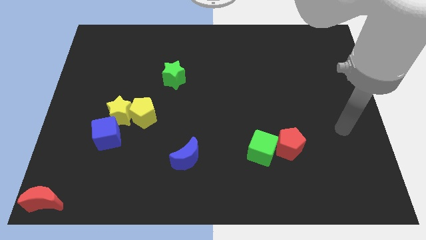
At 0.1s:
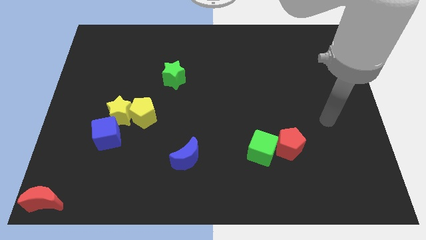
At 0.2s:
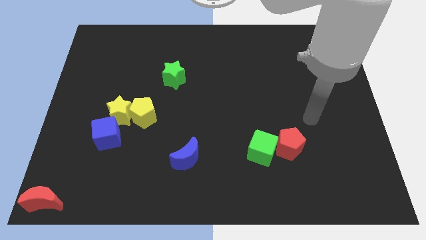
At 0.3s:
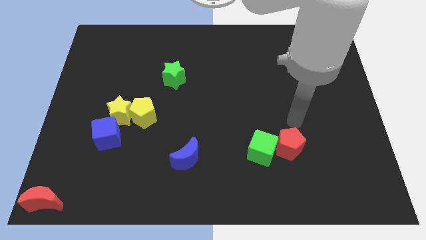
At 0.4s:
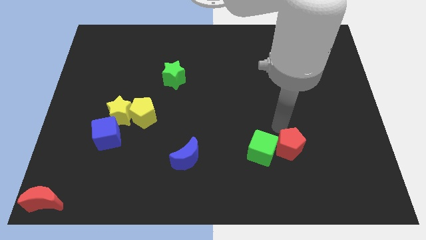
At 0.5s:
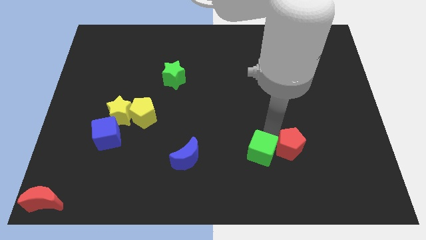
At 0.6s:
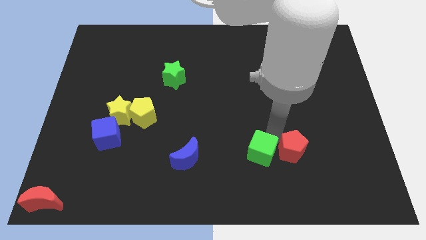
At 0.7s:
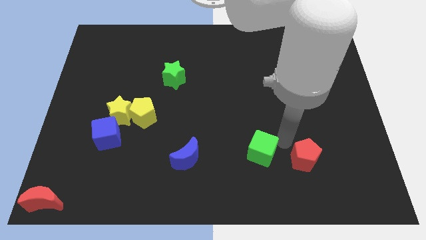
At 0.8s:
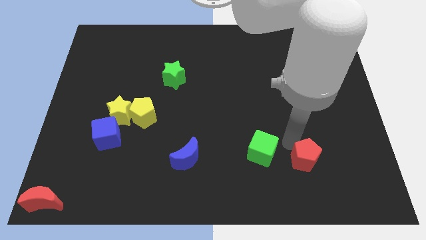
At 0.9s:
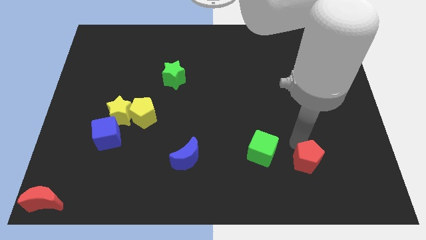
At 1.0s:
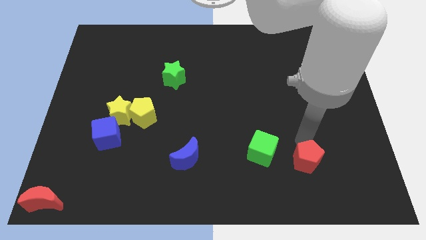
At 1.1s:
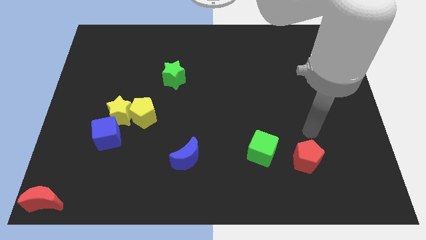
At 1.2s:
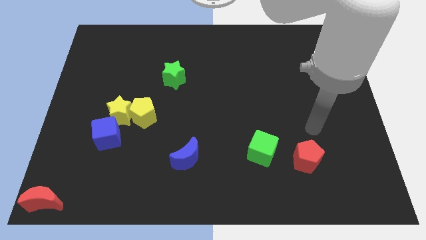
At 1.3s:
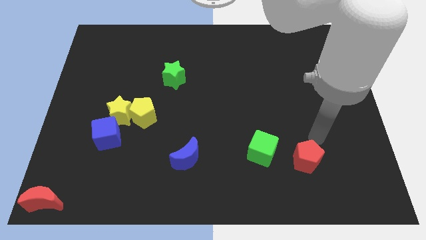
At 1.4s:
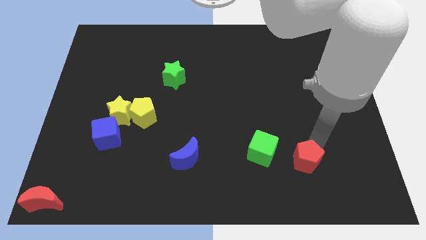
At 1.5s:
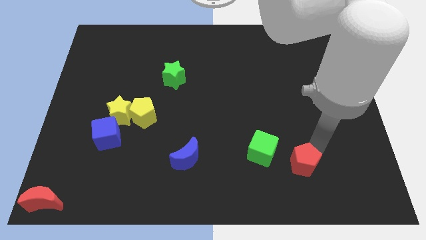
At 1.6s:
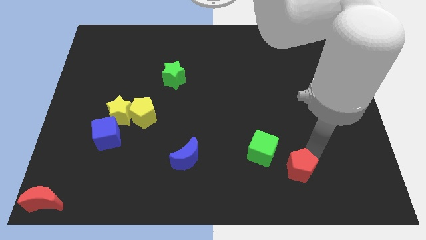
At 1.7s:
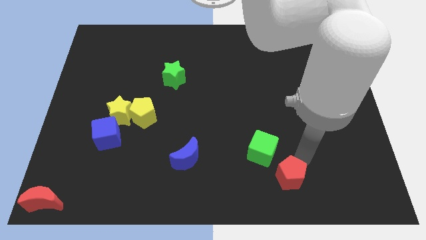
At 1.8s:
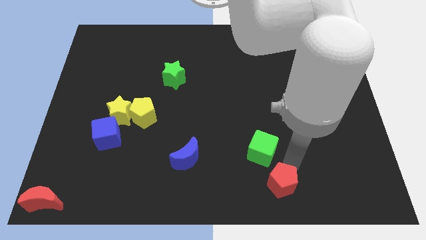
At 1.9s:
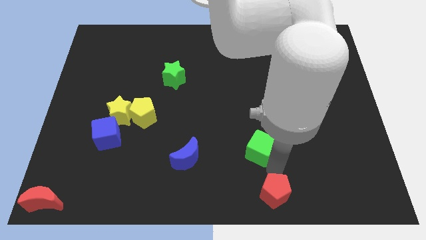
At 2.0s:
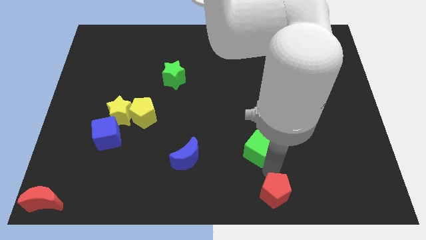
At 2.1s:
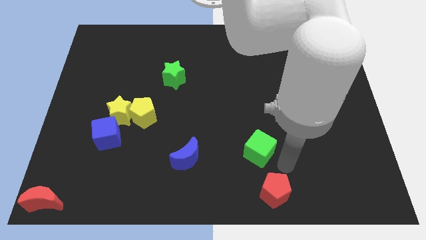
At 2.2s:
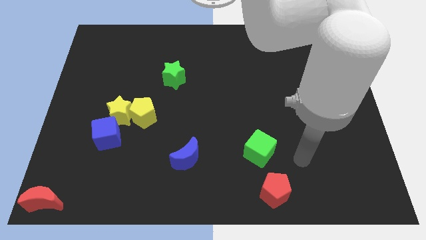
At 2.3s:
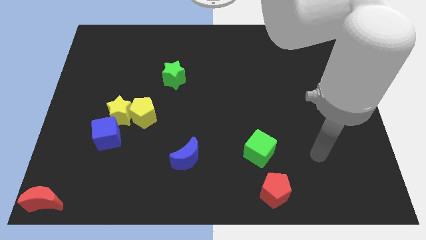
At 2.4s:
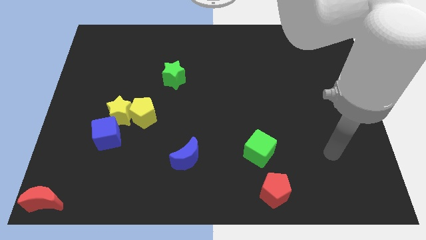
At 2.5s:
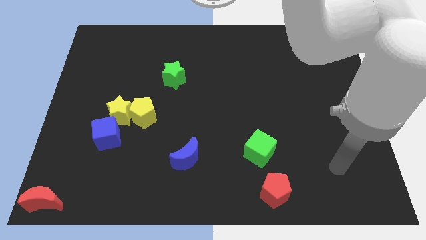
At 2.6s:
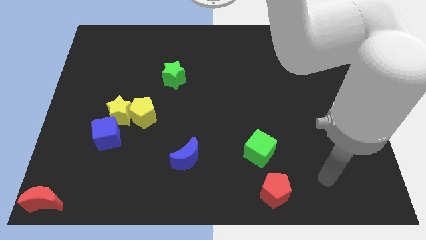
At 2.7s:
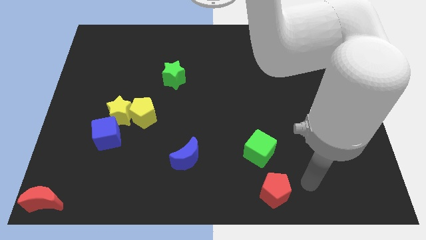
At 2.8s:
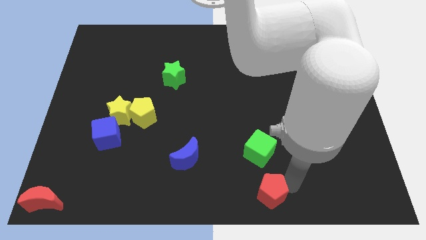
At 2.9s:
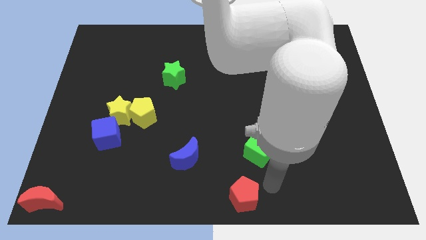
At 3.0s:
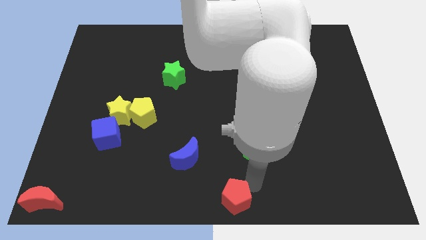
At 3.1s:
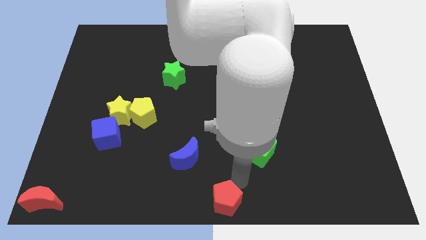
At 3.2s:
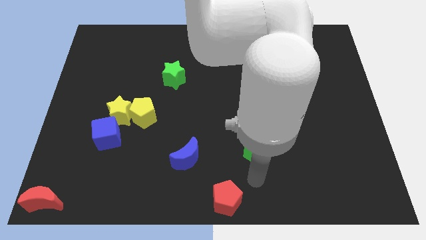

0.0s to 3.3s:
seperate the red pentagon frmo the green cube

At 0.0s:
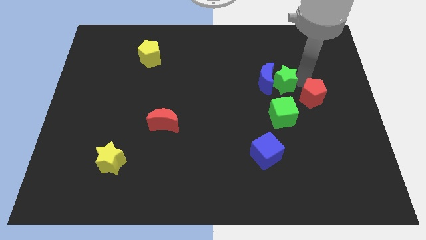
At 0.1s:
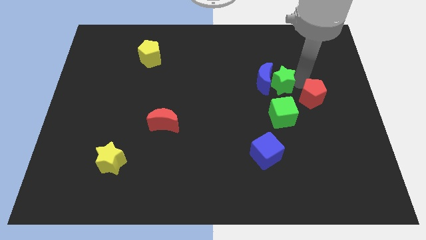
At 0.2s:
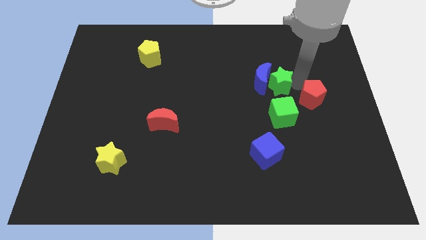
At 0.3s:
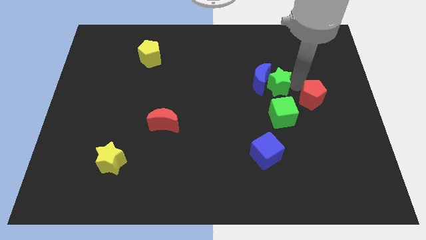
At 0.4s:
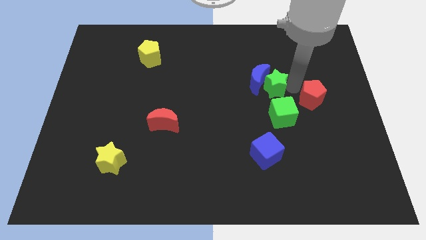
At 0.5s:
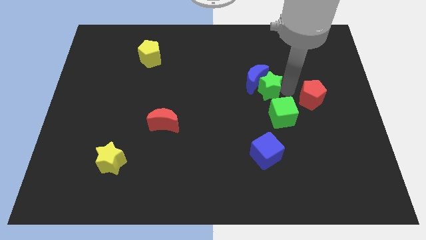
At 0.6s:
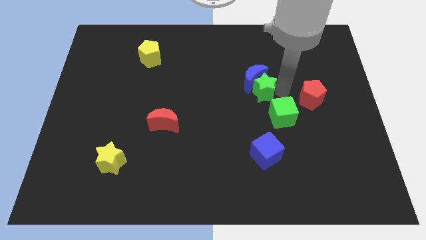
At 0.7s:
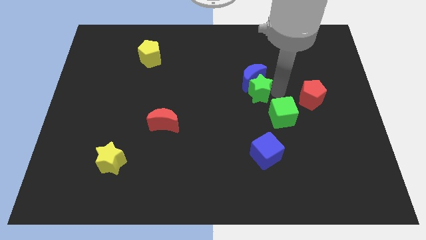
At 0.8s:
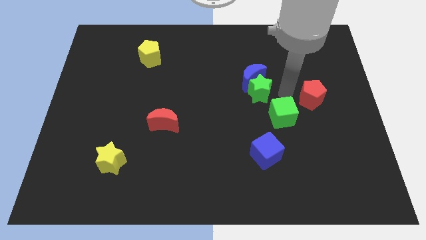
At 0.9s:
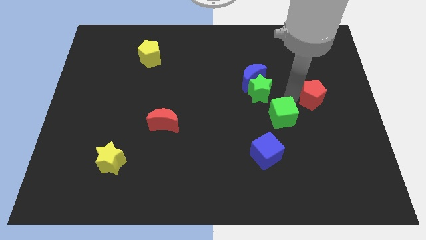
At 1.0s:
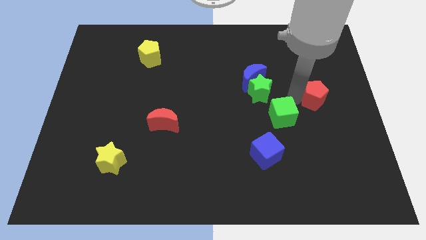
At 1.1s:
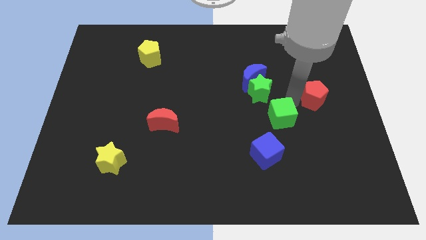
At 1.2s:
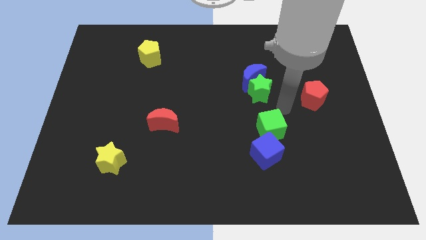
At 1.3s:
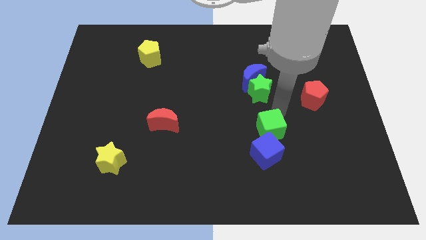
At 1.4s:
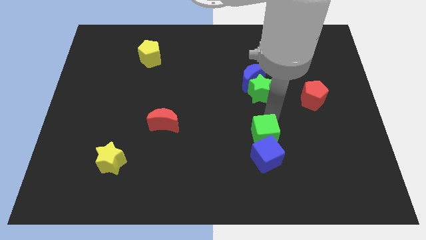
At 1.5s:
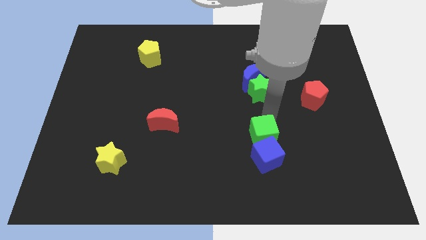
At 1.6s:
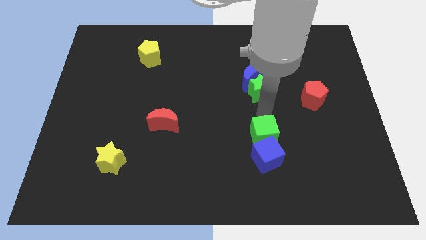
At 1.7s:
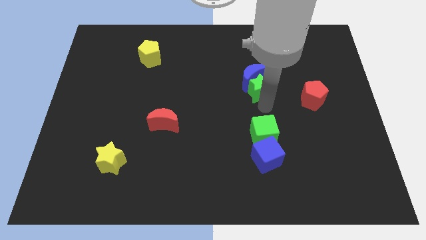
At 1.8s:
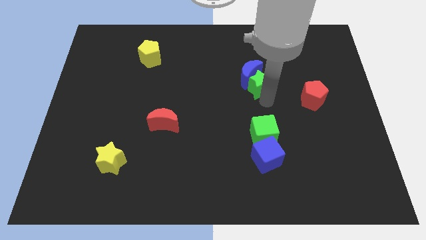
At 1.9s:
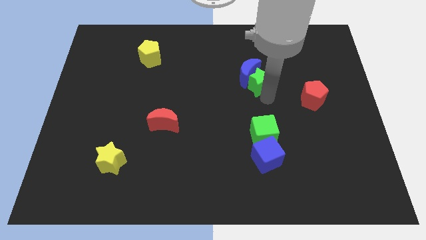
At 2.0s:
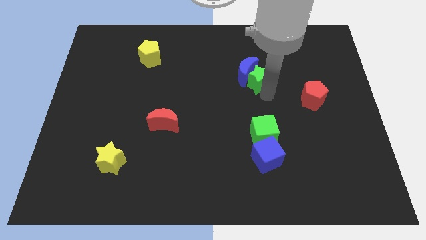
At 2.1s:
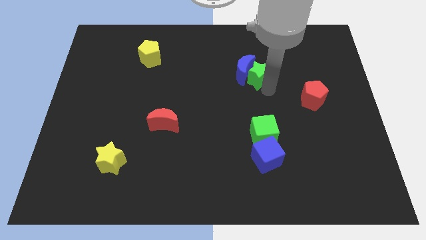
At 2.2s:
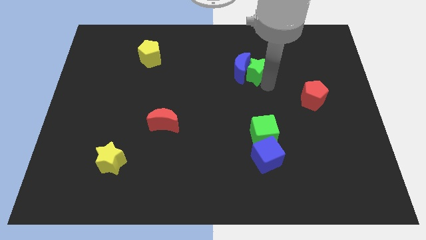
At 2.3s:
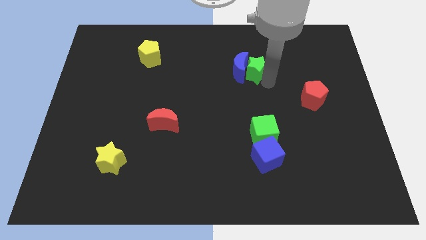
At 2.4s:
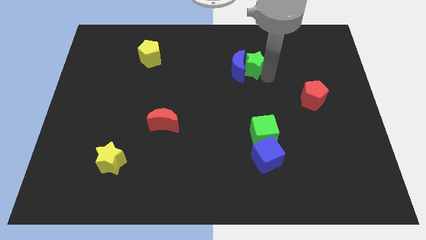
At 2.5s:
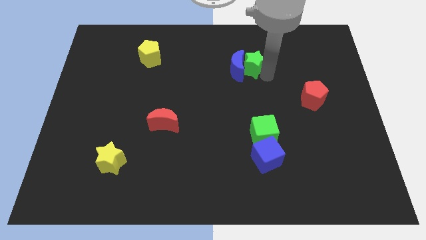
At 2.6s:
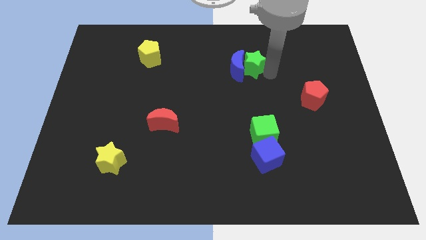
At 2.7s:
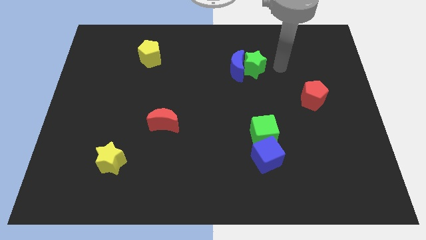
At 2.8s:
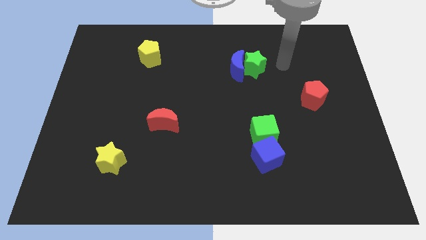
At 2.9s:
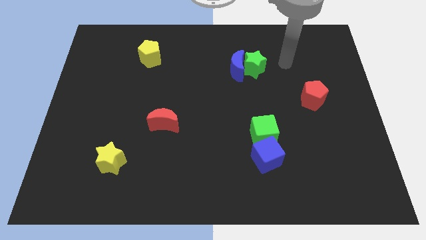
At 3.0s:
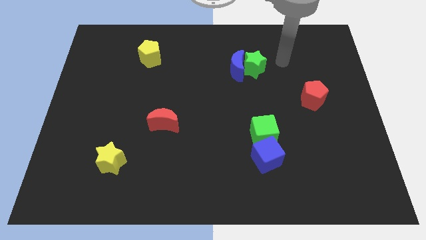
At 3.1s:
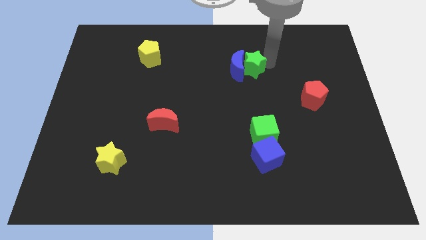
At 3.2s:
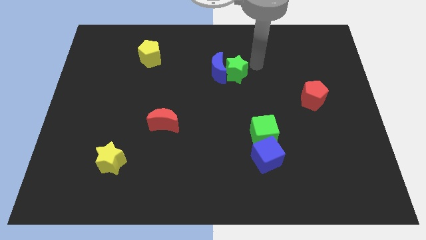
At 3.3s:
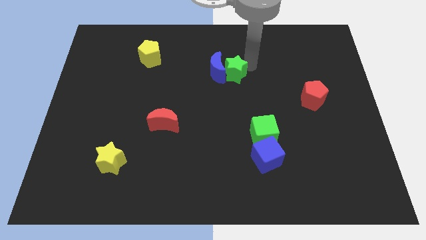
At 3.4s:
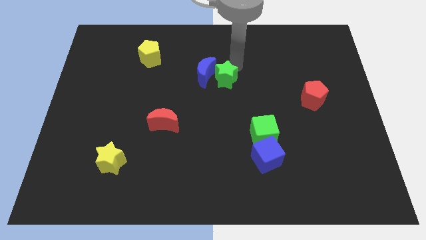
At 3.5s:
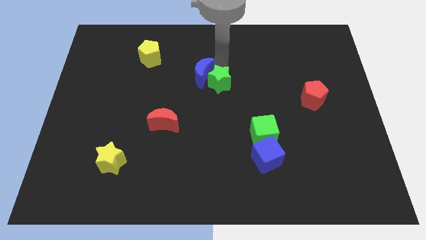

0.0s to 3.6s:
slide the green star and blue crescent towards the left

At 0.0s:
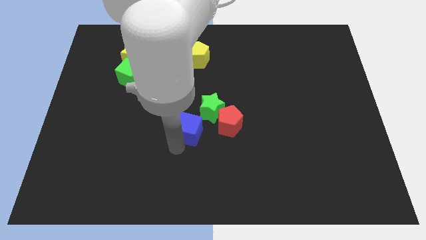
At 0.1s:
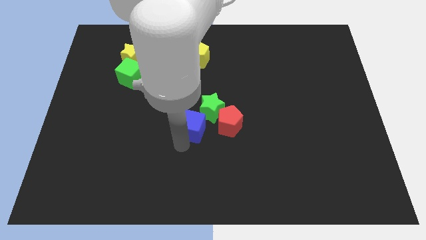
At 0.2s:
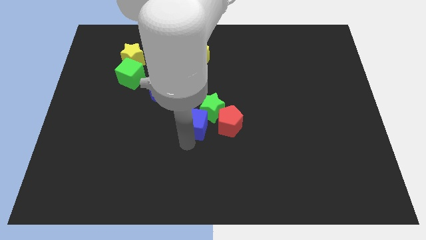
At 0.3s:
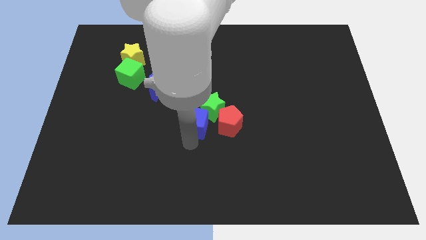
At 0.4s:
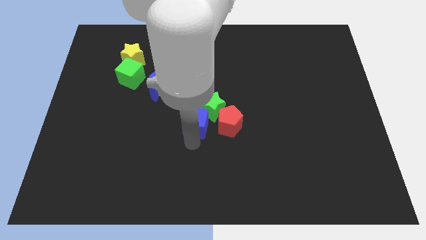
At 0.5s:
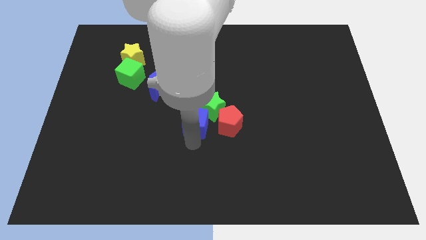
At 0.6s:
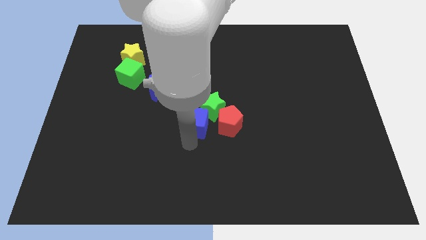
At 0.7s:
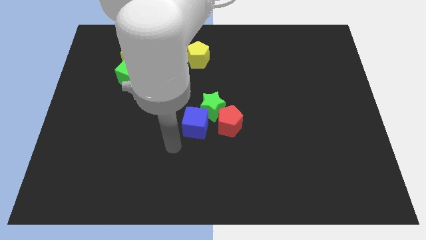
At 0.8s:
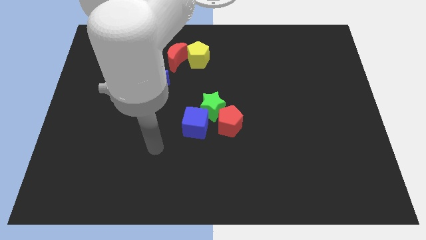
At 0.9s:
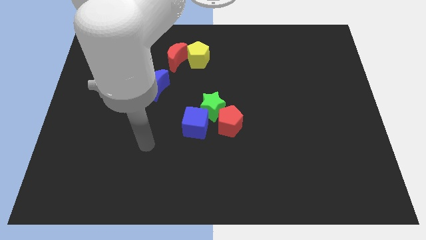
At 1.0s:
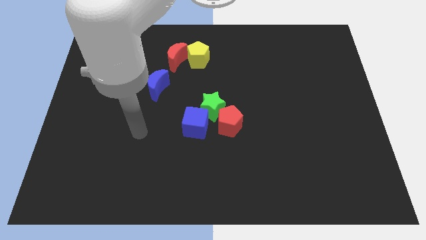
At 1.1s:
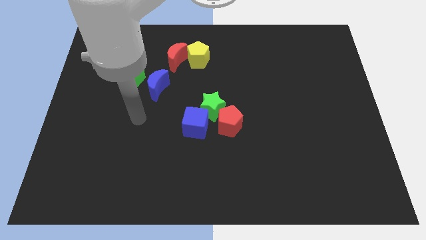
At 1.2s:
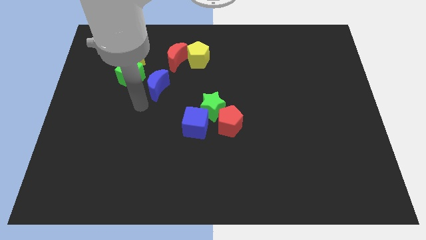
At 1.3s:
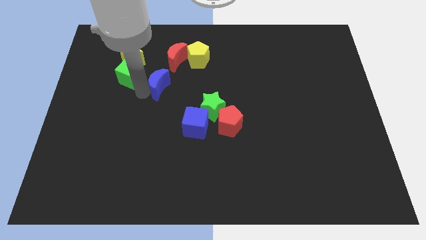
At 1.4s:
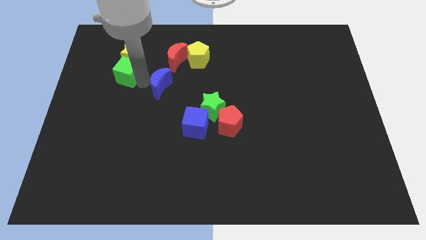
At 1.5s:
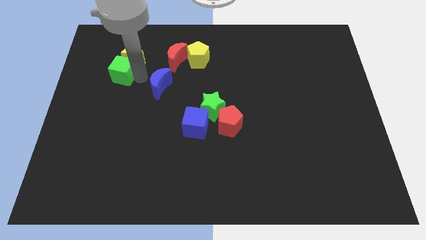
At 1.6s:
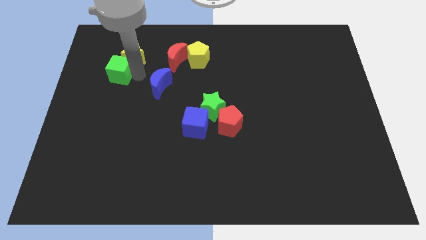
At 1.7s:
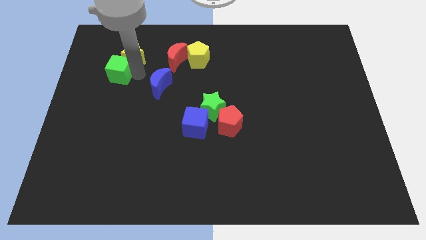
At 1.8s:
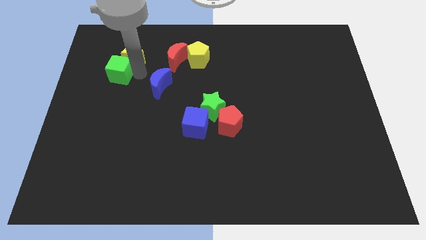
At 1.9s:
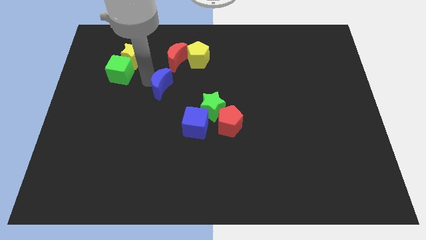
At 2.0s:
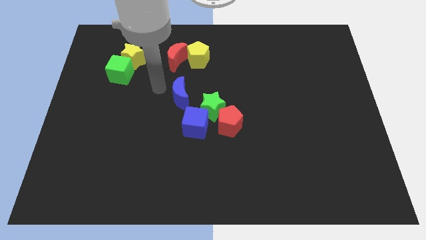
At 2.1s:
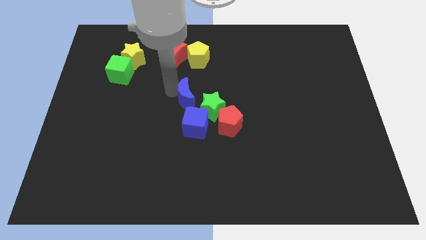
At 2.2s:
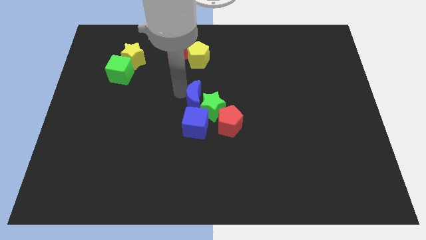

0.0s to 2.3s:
move the left below the green star
